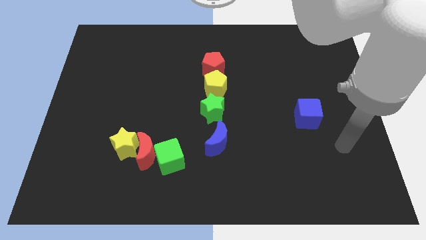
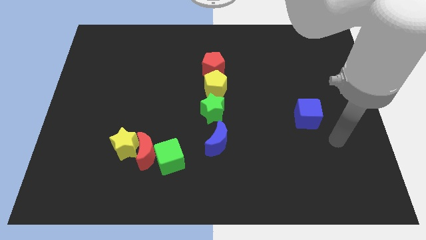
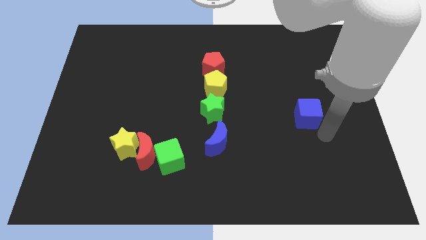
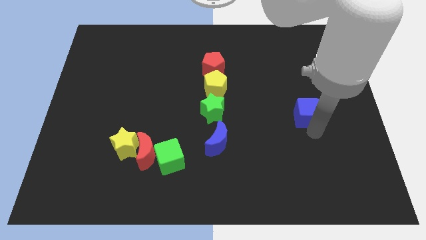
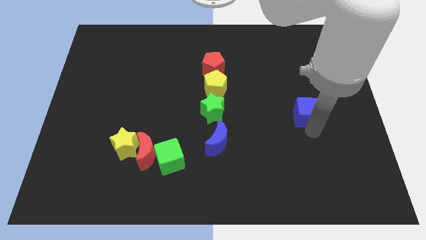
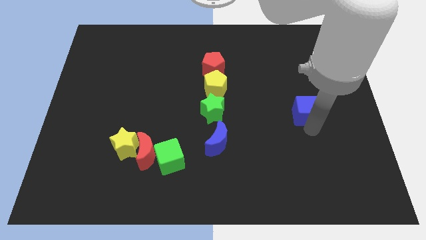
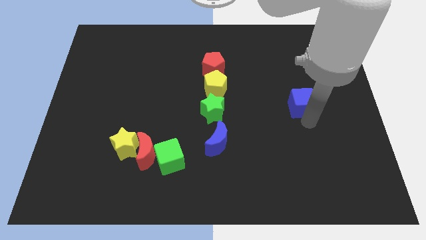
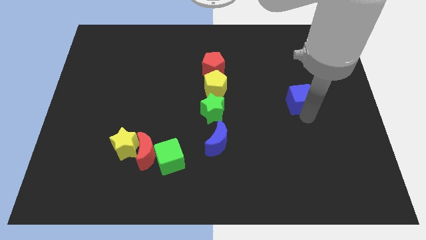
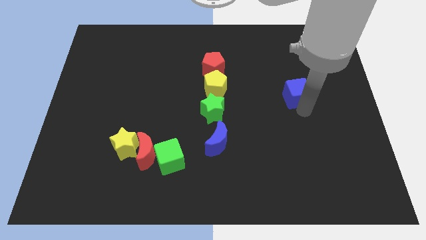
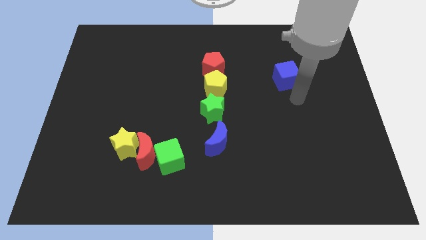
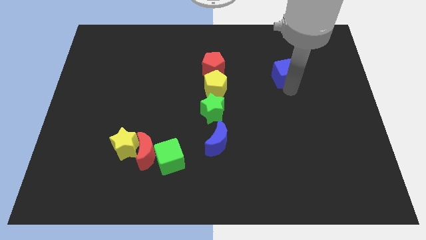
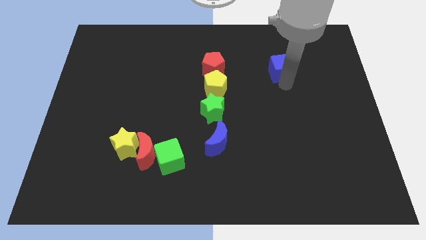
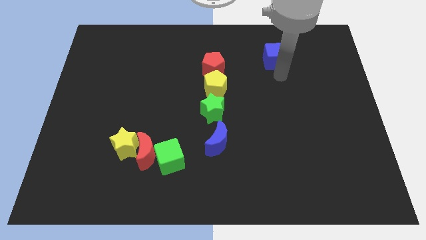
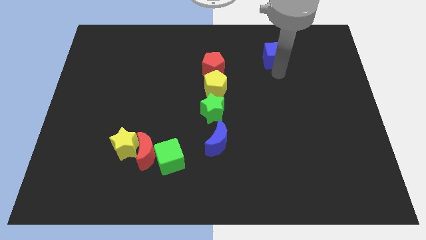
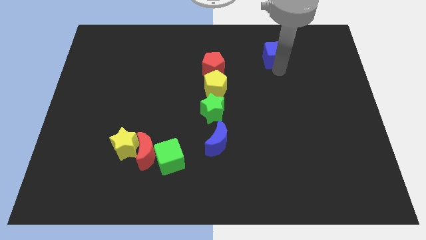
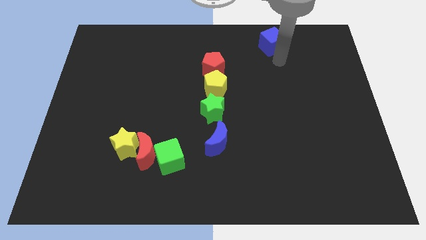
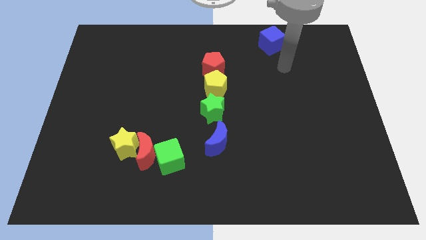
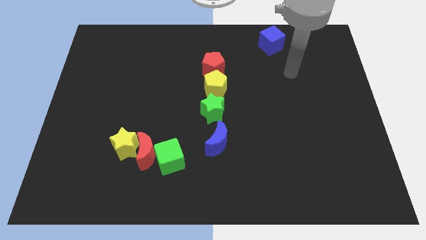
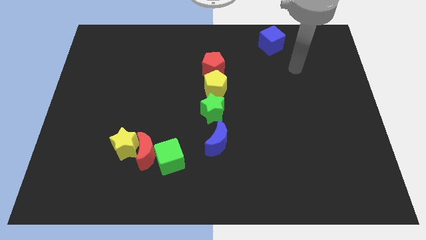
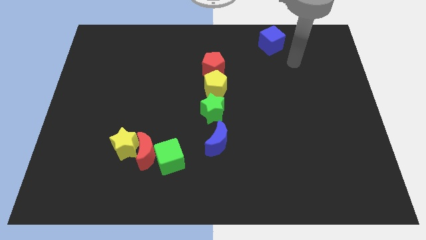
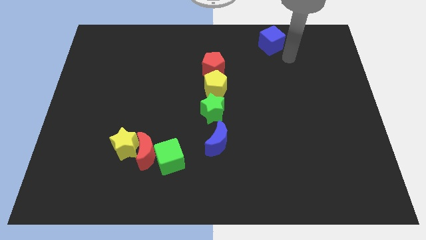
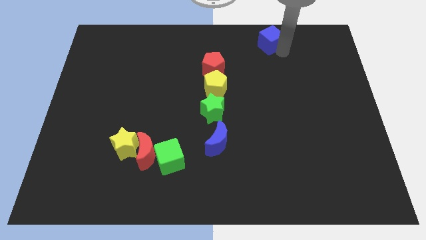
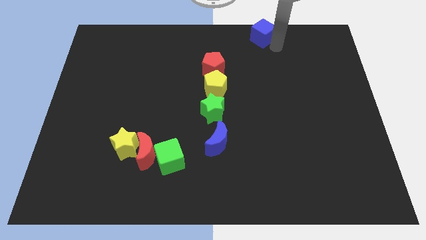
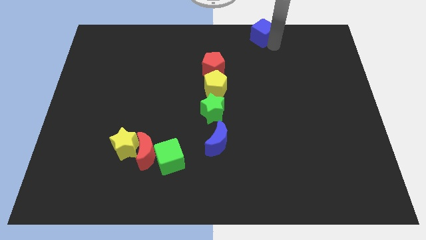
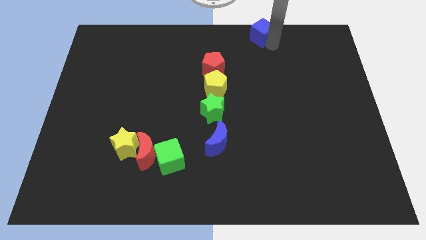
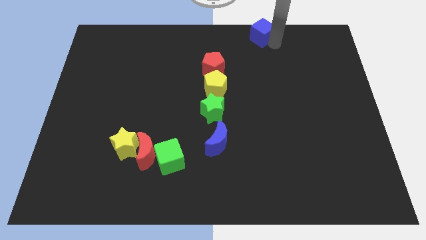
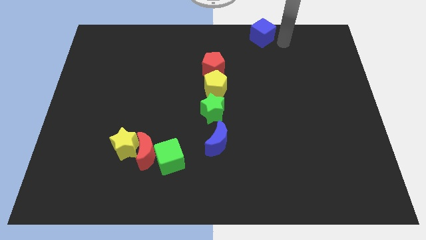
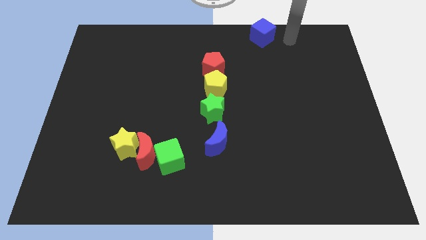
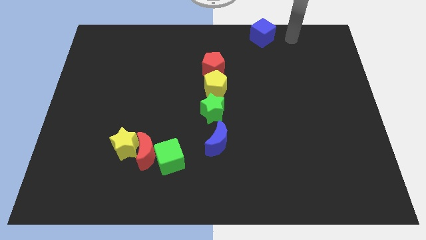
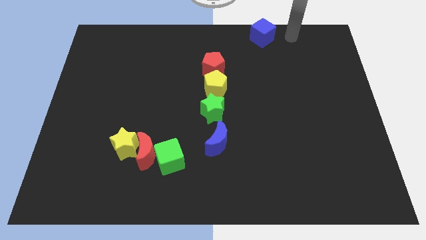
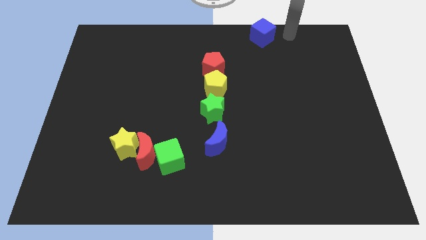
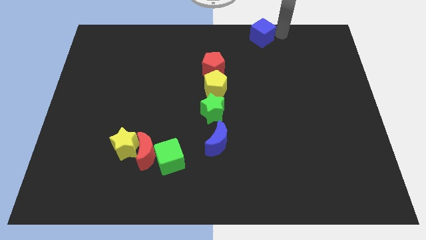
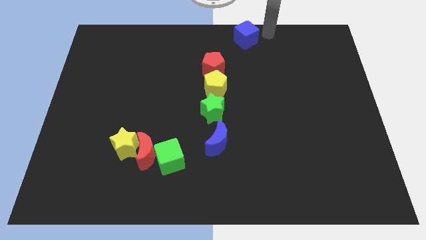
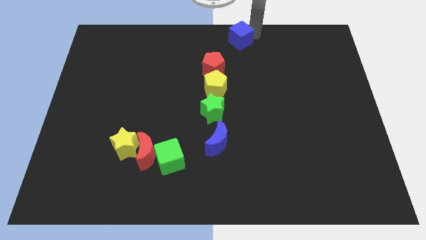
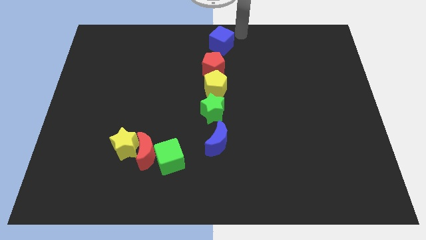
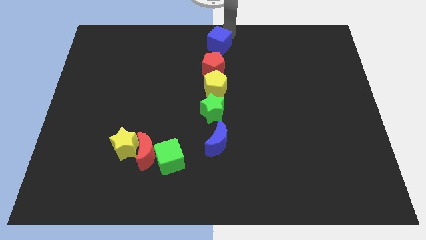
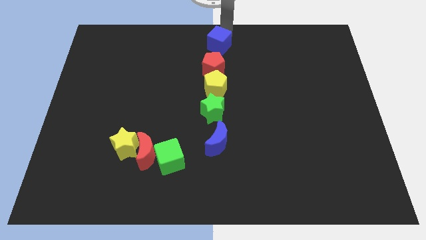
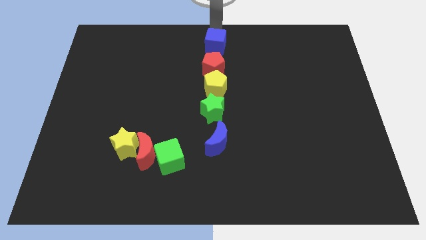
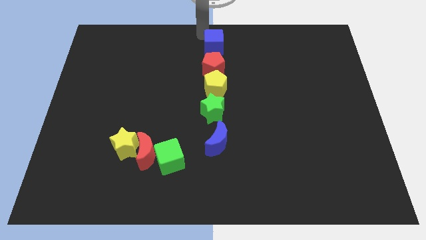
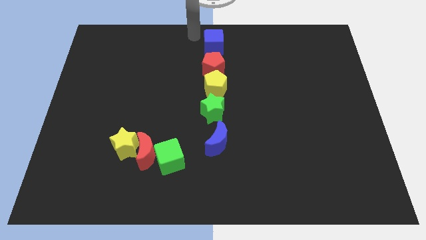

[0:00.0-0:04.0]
push the blue cube to the top of the blocks to form vertical line

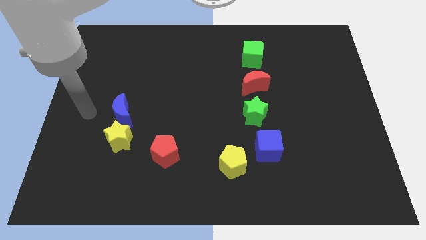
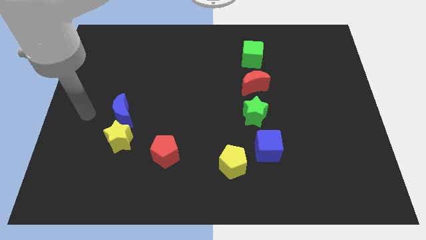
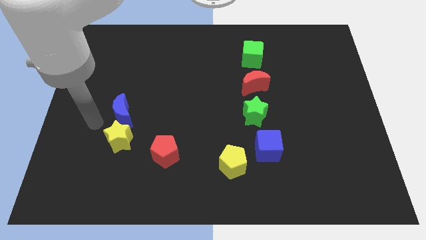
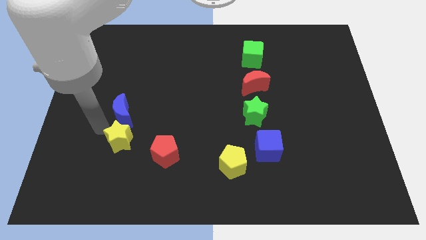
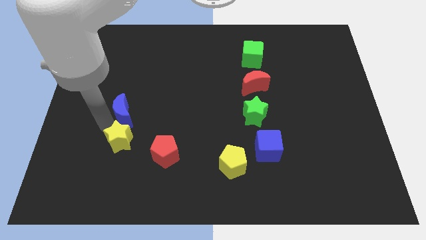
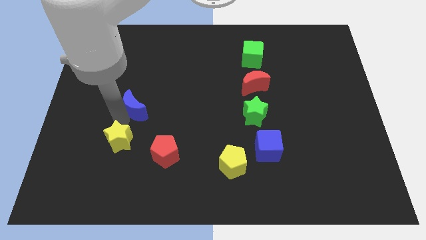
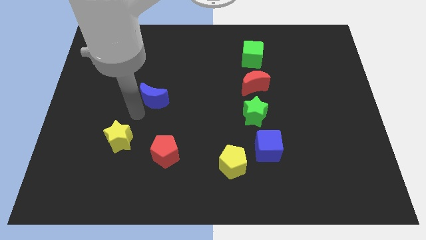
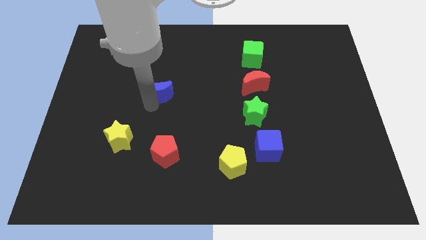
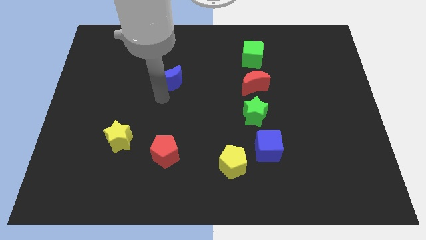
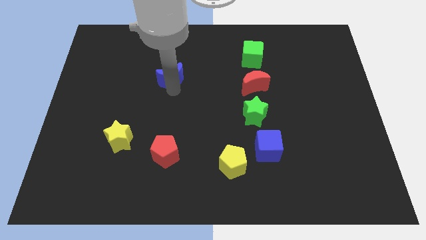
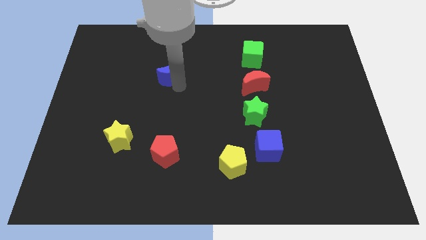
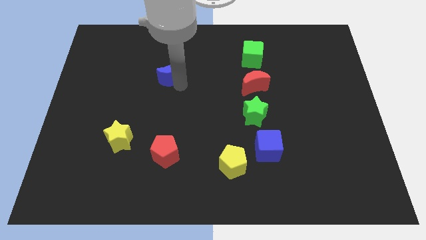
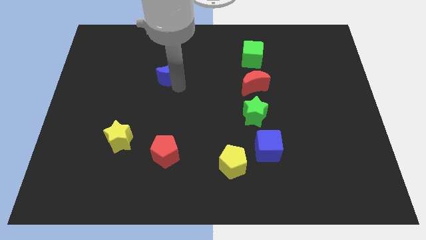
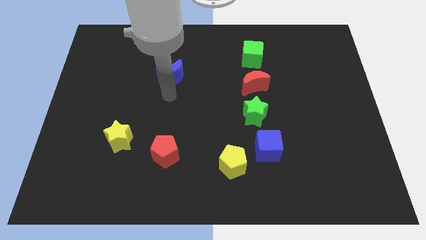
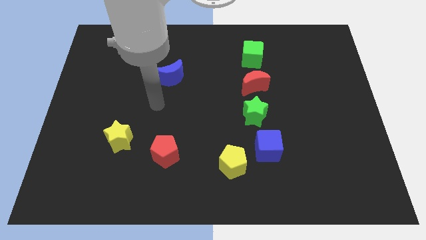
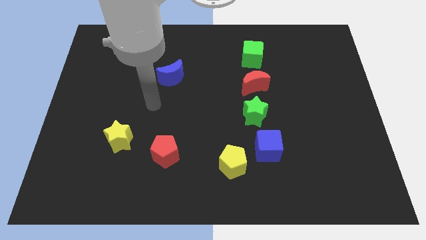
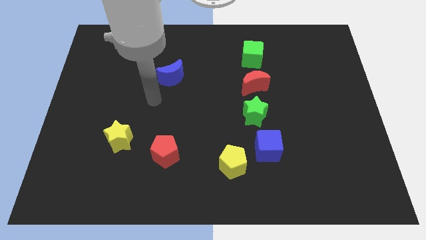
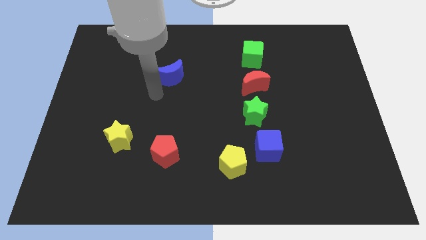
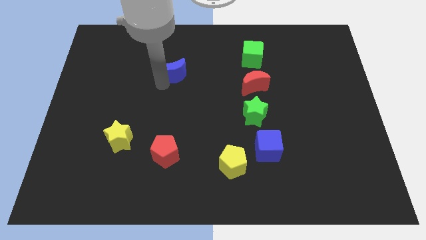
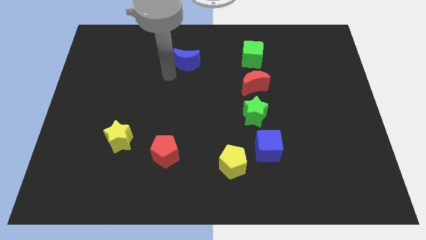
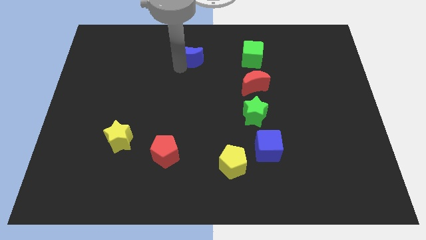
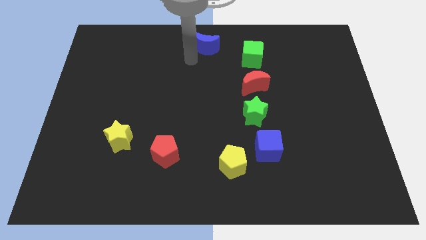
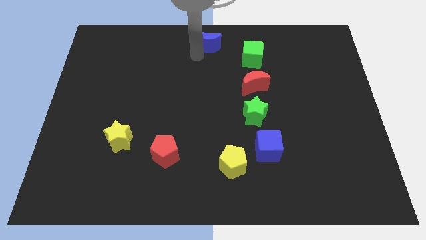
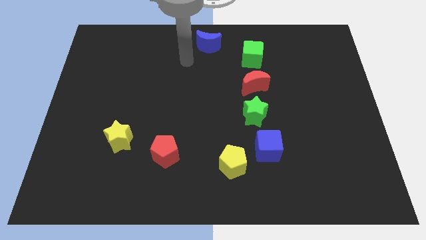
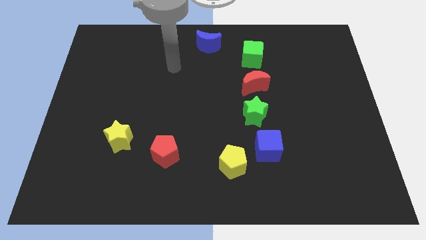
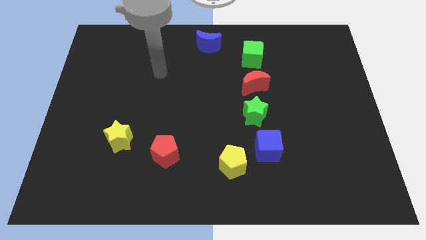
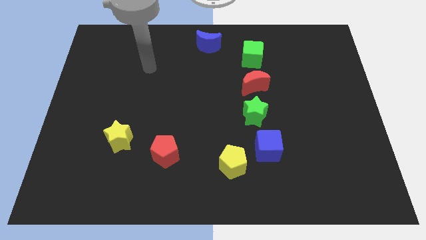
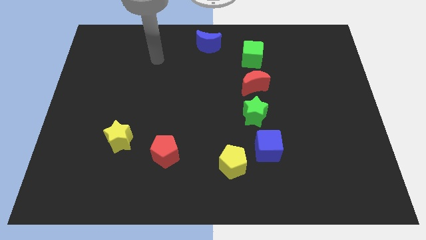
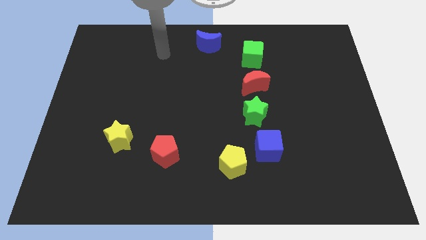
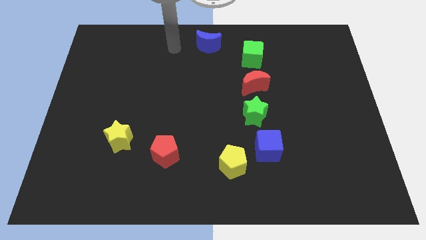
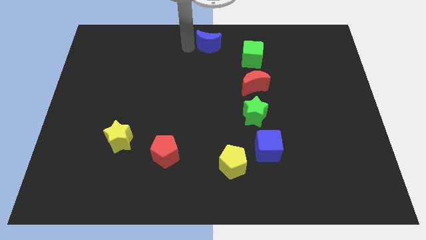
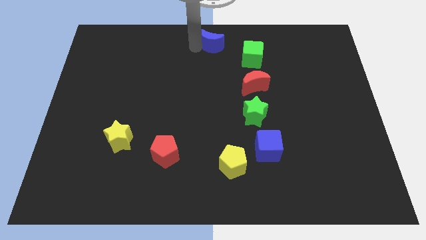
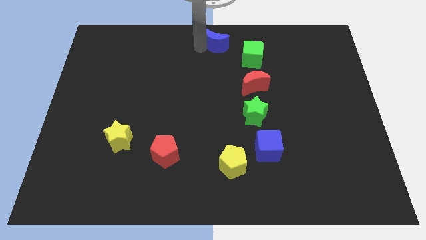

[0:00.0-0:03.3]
push the blue crescent to the left of the green cube

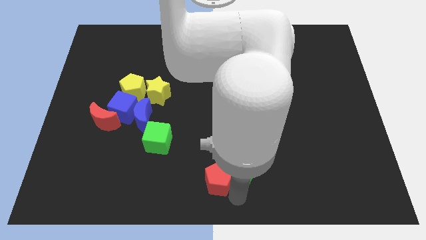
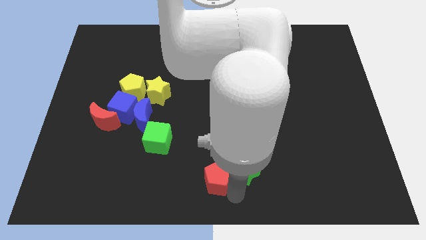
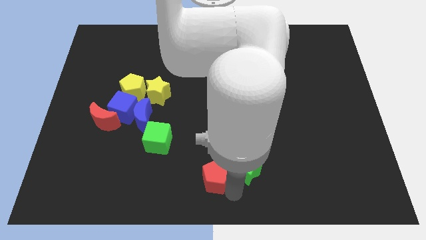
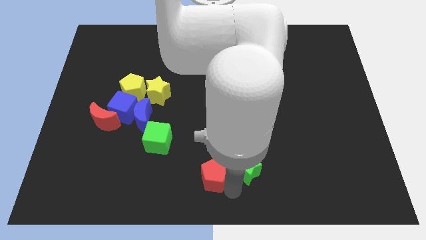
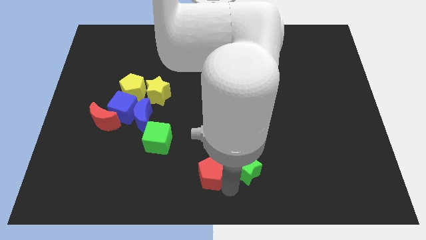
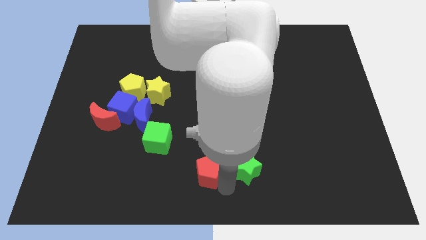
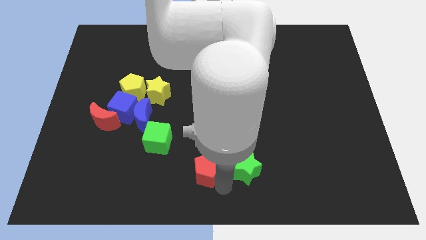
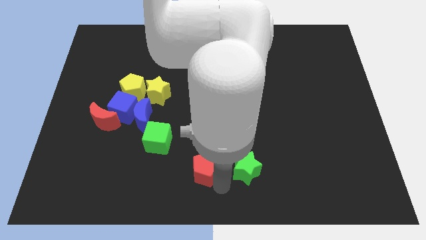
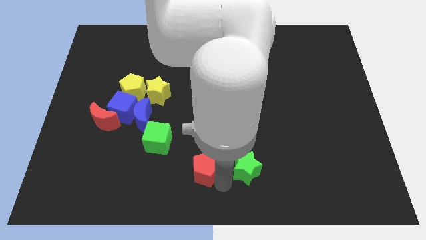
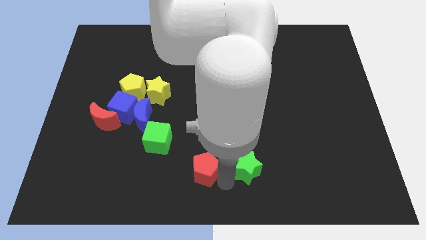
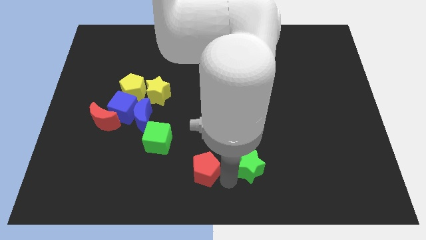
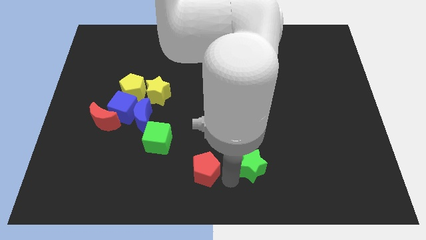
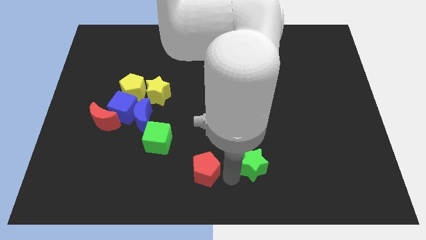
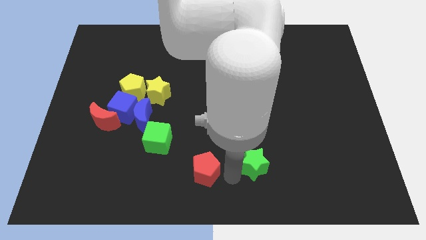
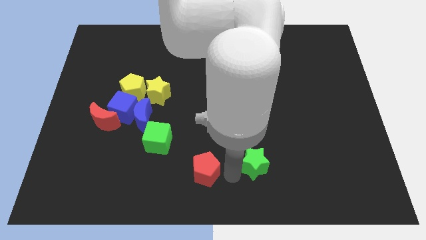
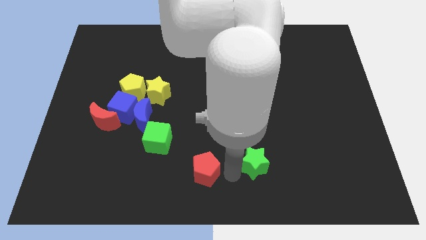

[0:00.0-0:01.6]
separate the red pentagon and the green star from each other
